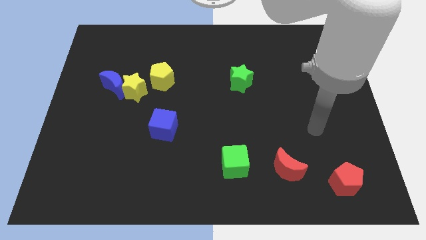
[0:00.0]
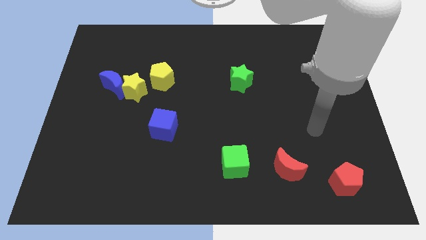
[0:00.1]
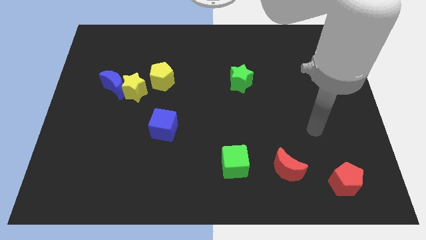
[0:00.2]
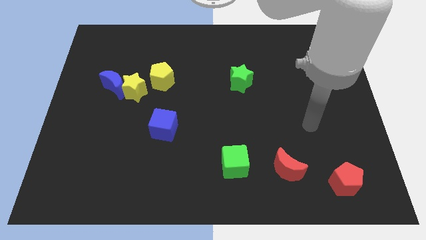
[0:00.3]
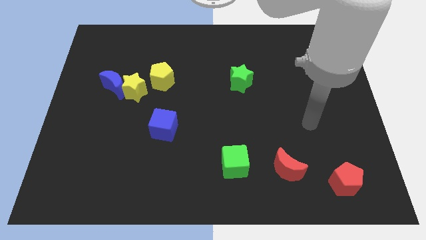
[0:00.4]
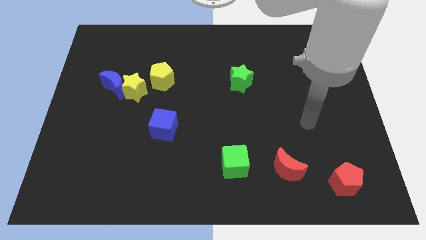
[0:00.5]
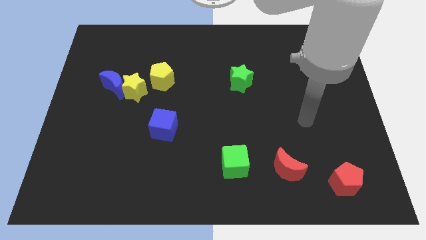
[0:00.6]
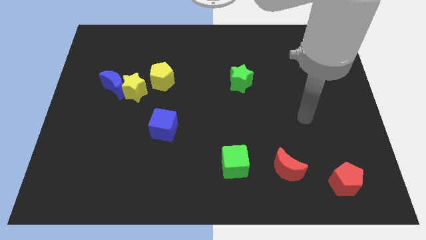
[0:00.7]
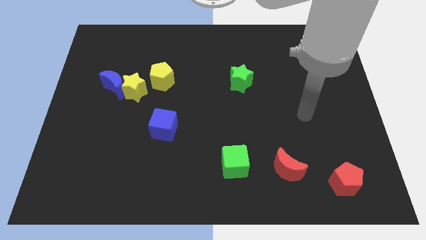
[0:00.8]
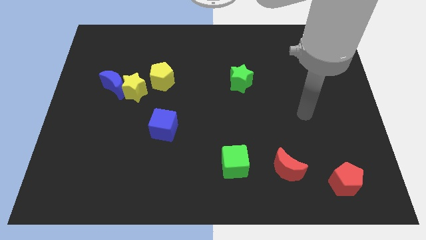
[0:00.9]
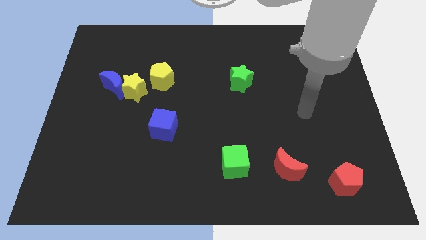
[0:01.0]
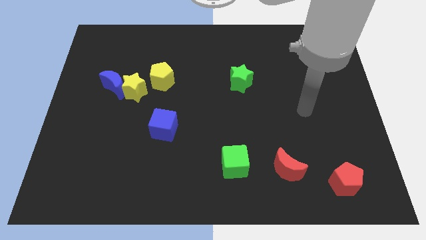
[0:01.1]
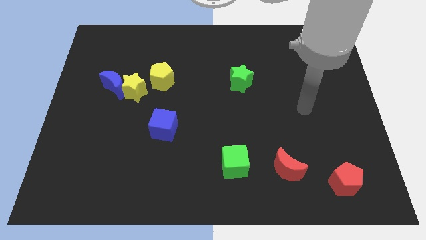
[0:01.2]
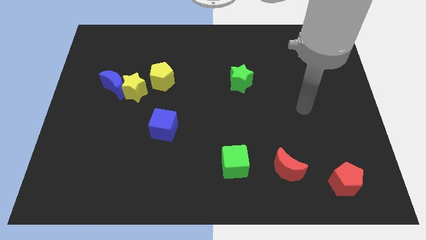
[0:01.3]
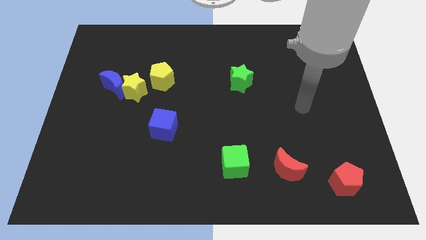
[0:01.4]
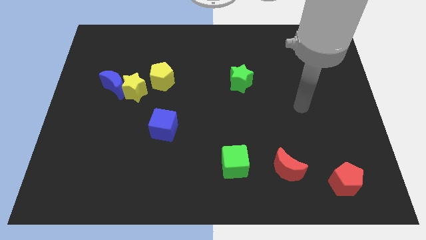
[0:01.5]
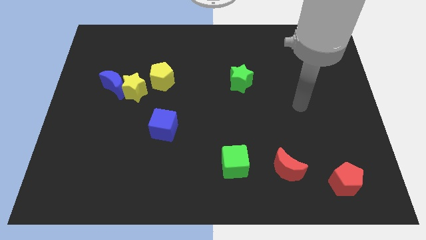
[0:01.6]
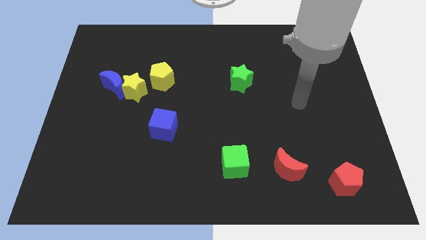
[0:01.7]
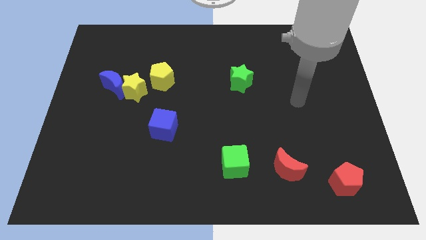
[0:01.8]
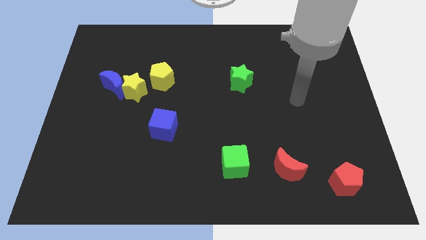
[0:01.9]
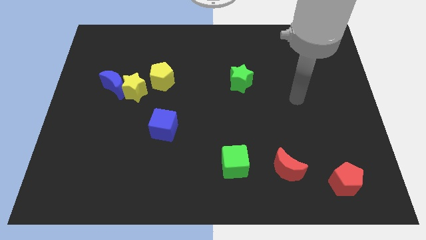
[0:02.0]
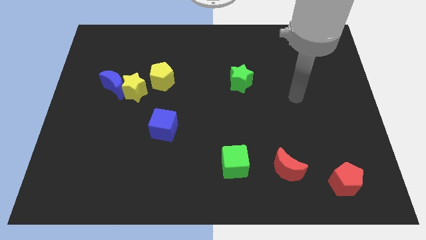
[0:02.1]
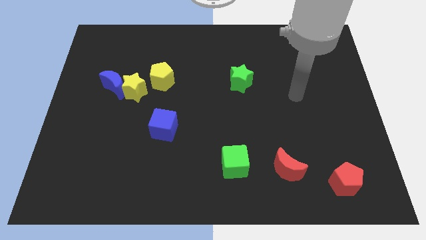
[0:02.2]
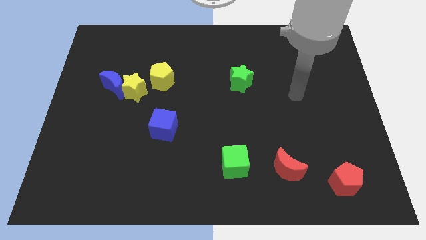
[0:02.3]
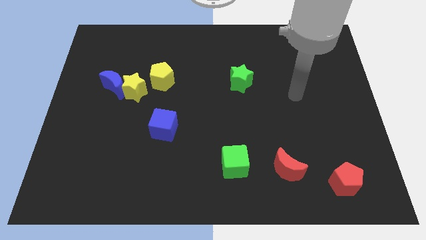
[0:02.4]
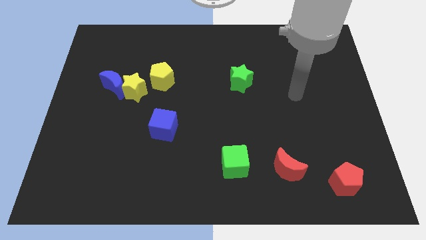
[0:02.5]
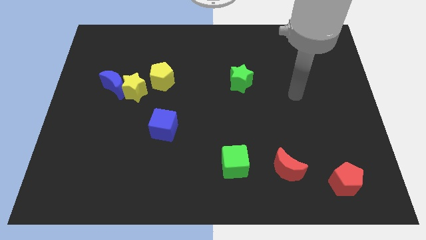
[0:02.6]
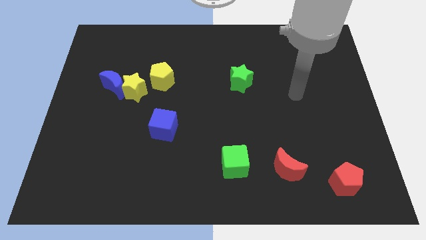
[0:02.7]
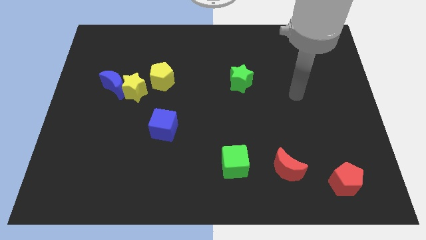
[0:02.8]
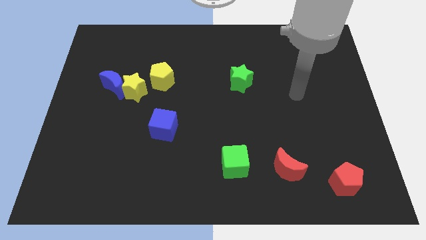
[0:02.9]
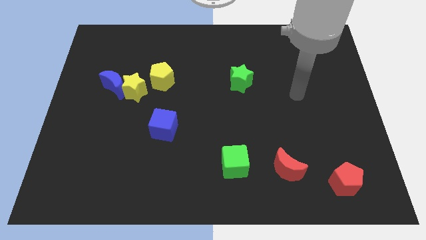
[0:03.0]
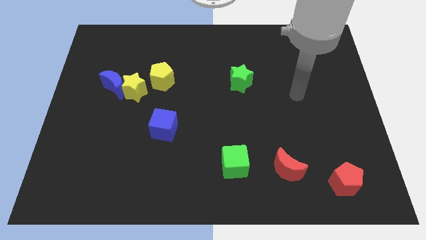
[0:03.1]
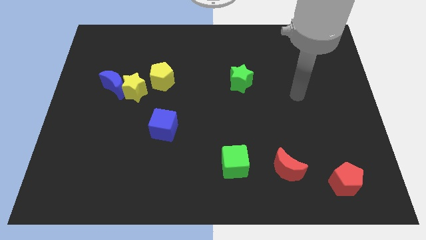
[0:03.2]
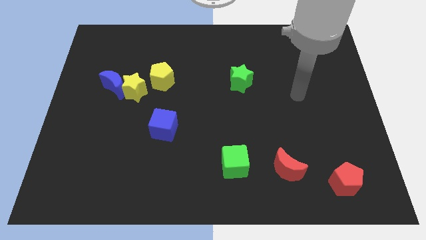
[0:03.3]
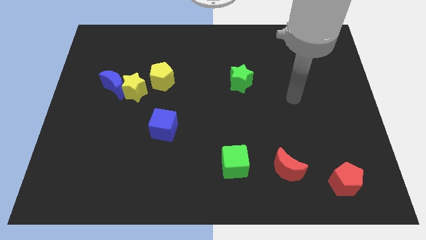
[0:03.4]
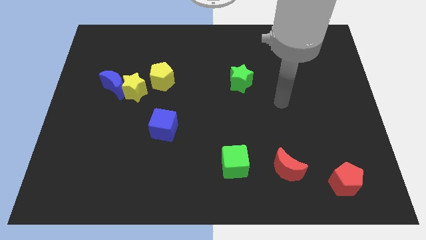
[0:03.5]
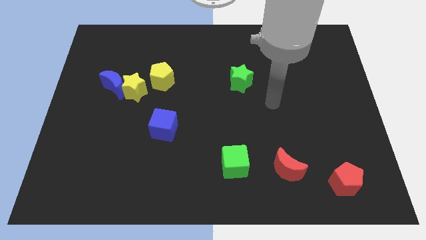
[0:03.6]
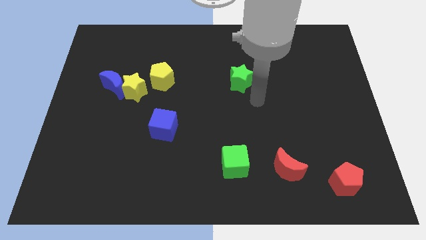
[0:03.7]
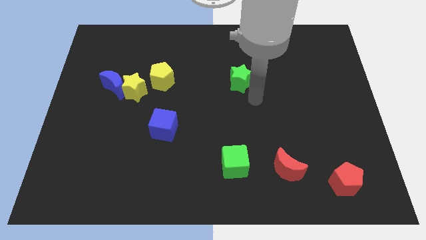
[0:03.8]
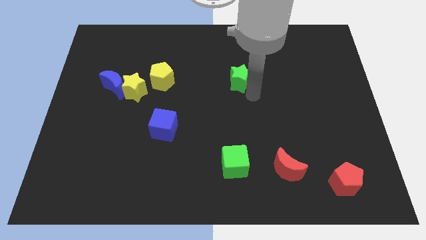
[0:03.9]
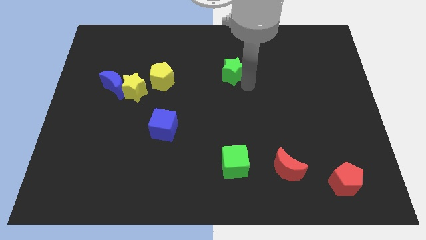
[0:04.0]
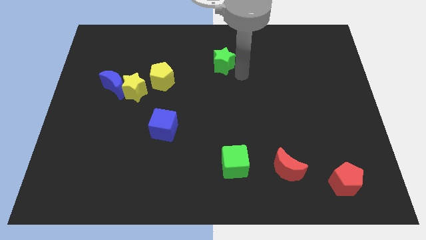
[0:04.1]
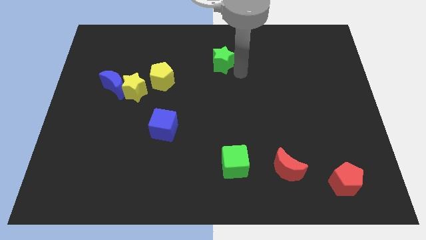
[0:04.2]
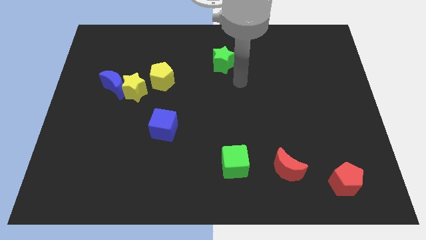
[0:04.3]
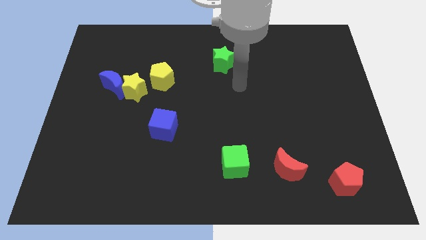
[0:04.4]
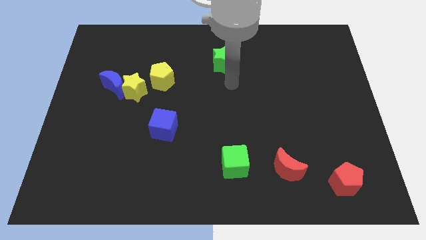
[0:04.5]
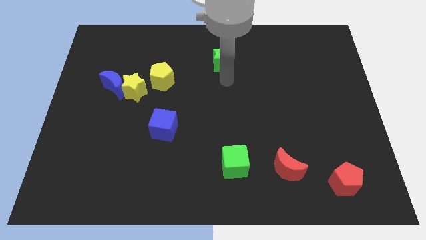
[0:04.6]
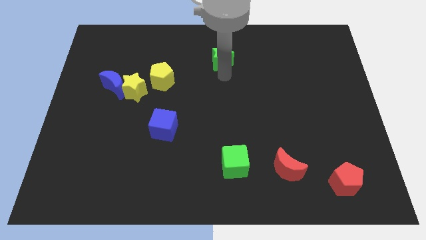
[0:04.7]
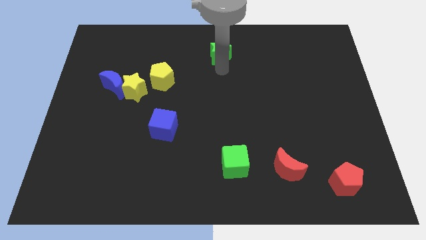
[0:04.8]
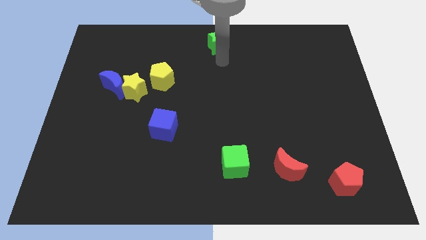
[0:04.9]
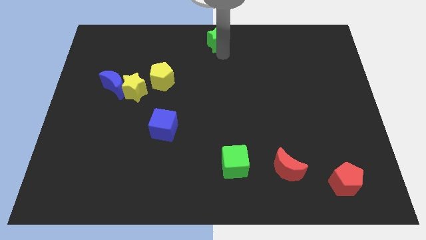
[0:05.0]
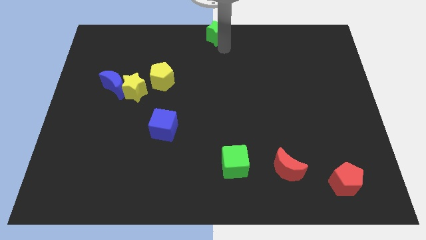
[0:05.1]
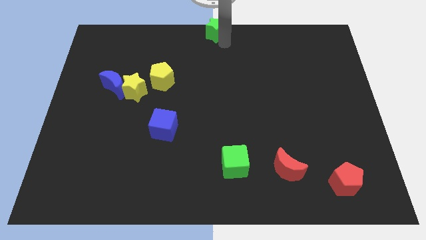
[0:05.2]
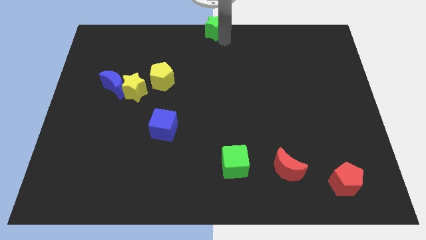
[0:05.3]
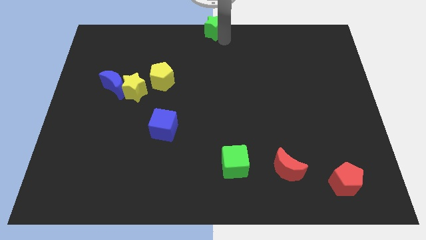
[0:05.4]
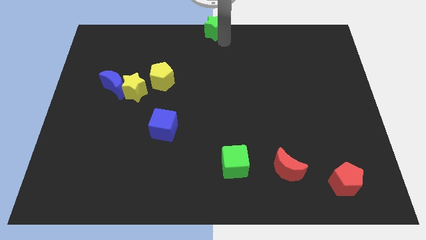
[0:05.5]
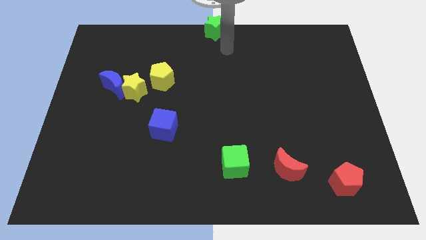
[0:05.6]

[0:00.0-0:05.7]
move the green star to the top center of the board

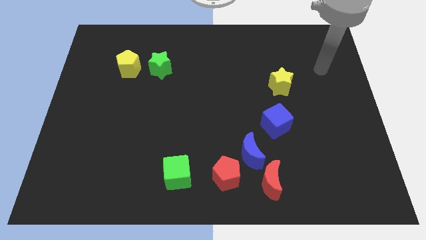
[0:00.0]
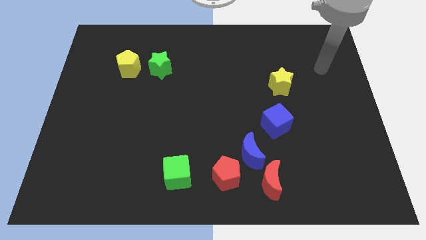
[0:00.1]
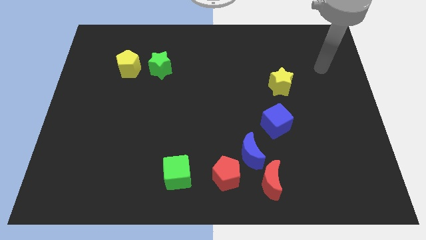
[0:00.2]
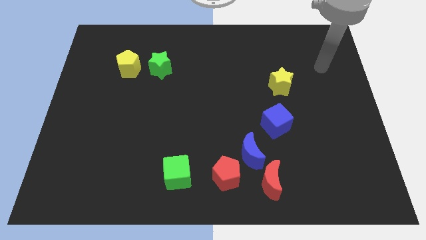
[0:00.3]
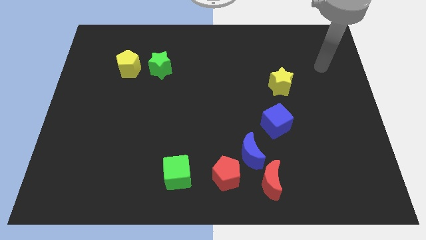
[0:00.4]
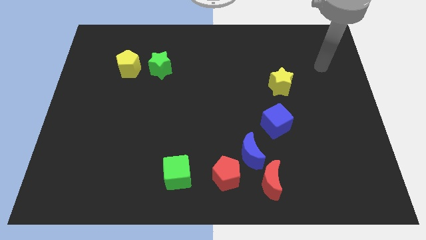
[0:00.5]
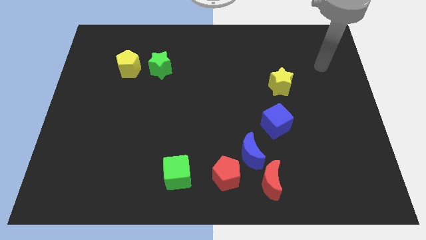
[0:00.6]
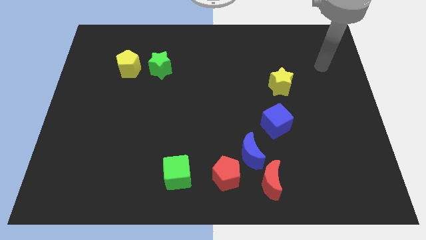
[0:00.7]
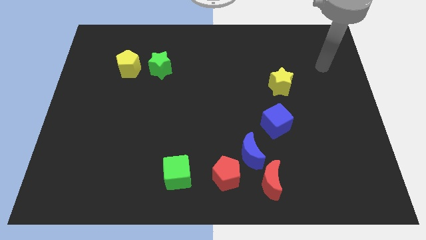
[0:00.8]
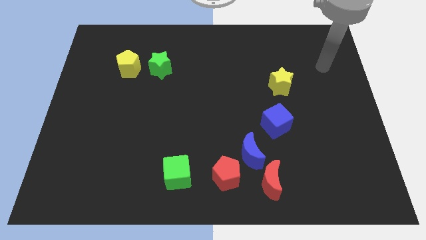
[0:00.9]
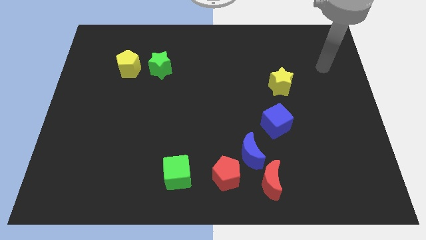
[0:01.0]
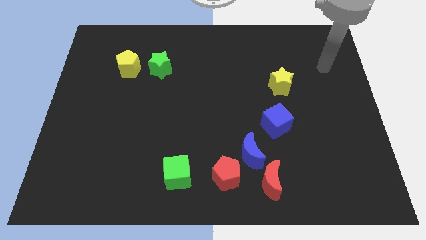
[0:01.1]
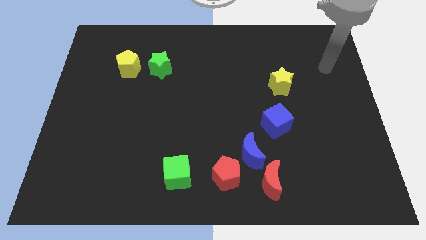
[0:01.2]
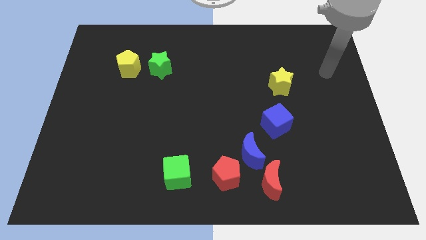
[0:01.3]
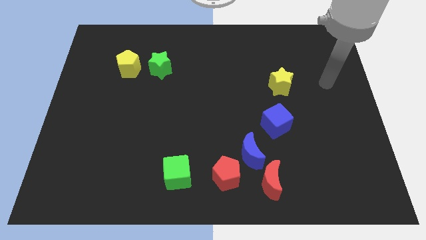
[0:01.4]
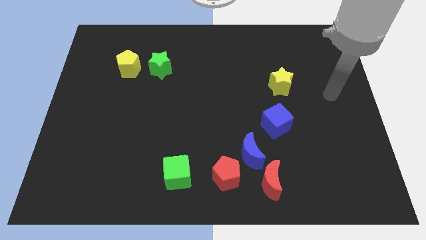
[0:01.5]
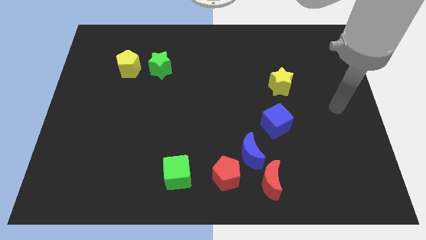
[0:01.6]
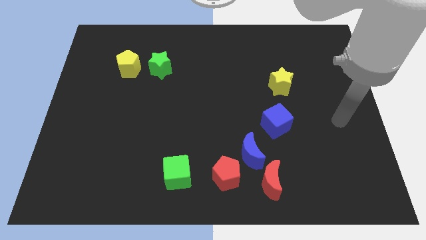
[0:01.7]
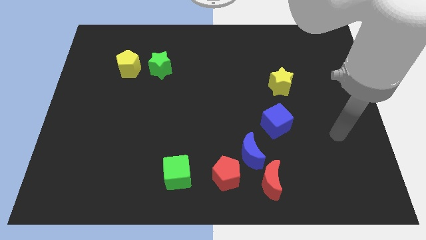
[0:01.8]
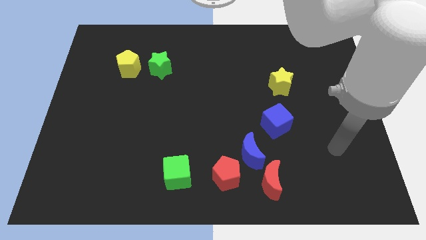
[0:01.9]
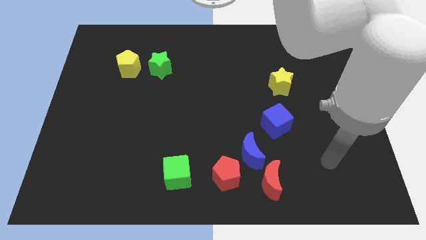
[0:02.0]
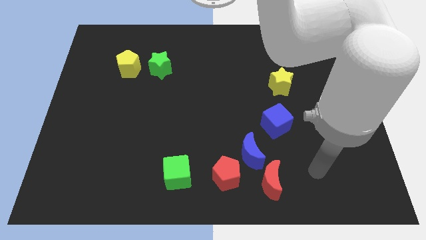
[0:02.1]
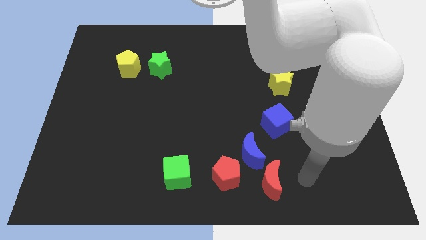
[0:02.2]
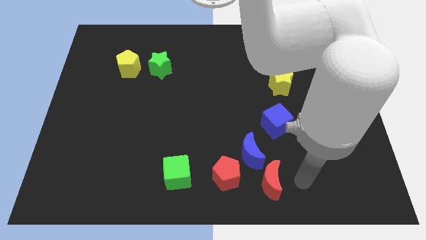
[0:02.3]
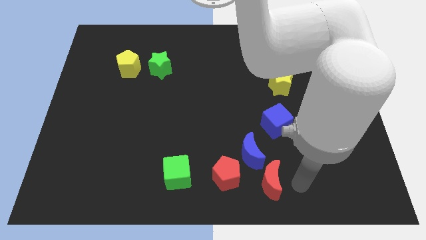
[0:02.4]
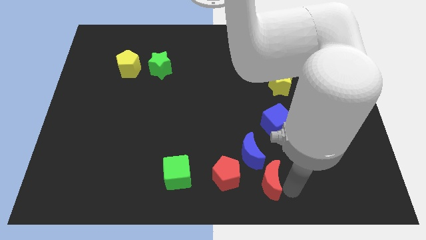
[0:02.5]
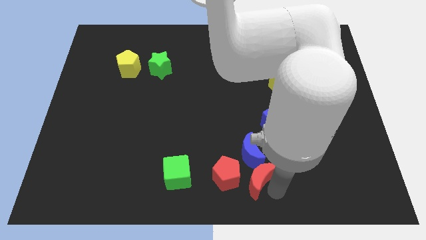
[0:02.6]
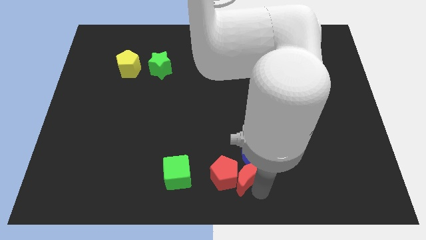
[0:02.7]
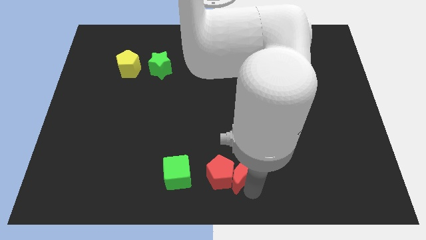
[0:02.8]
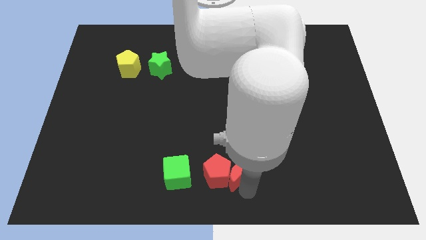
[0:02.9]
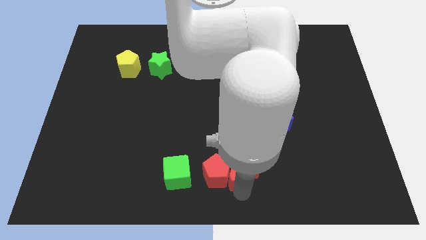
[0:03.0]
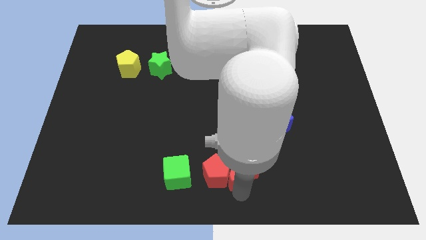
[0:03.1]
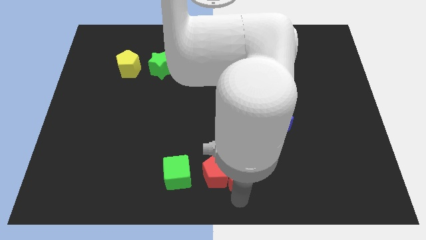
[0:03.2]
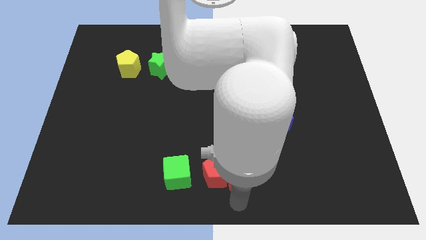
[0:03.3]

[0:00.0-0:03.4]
move the red crescent slightly right to the red pentagon
